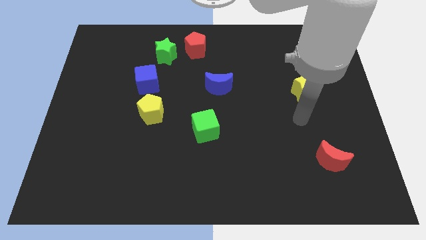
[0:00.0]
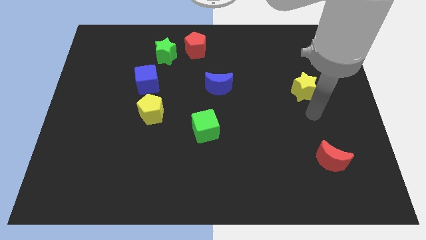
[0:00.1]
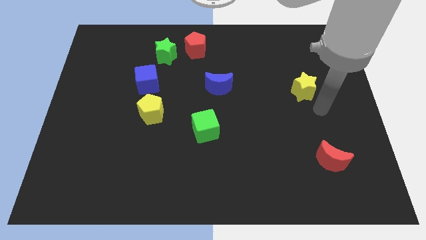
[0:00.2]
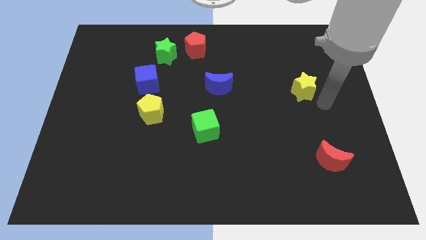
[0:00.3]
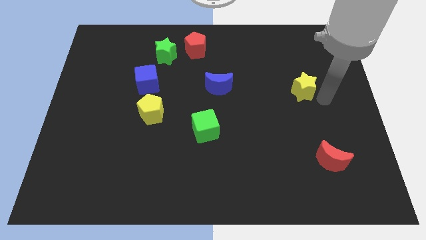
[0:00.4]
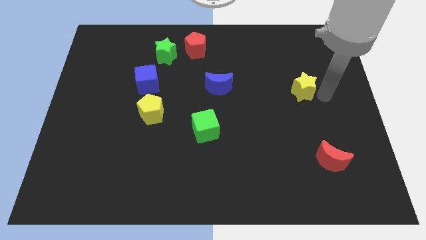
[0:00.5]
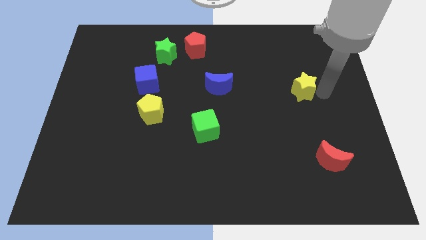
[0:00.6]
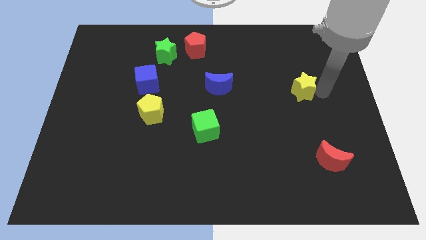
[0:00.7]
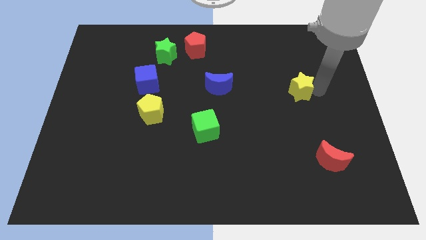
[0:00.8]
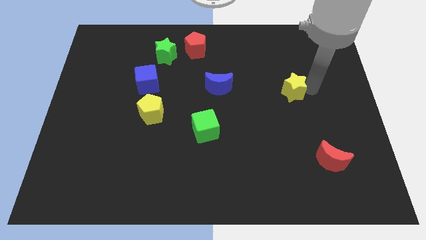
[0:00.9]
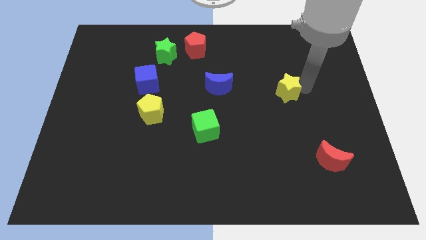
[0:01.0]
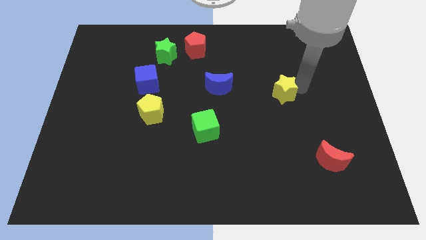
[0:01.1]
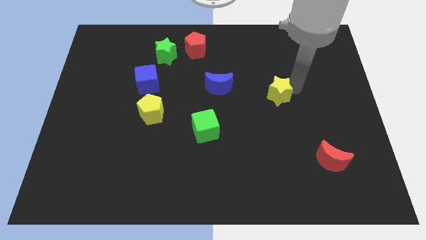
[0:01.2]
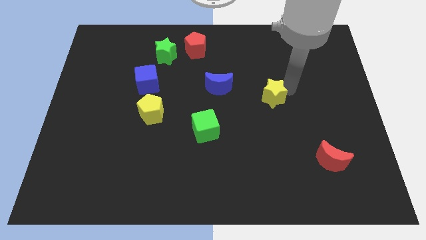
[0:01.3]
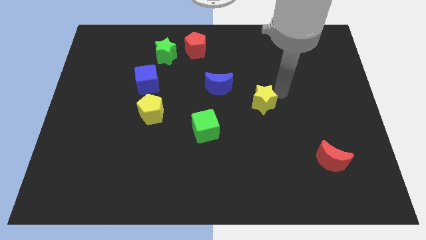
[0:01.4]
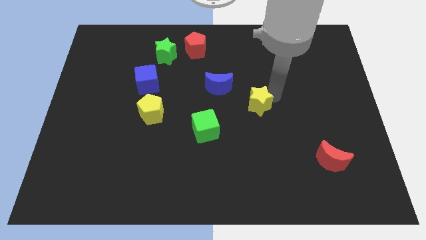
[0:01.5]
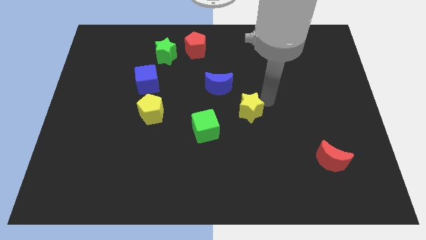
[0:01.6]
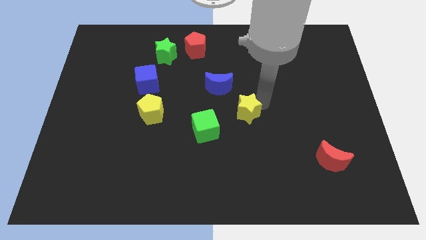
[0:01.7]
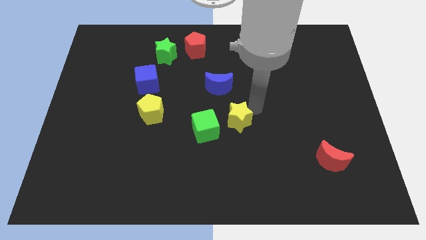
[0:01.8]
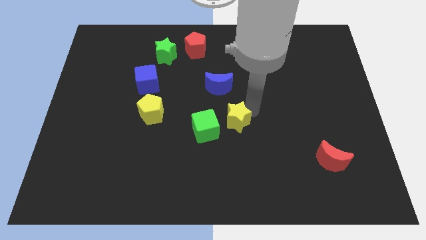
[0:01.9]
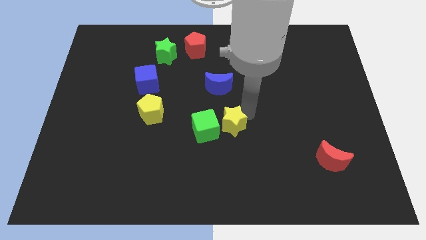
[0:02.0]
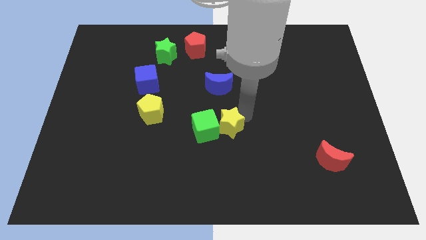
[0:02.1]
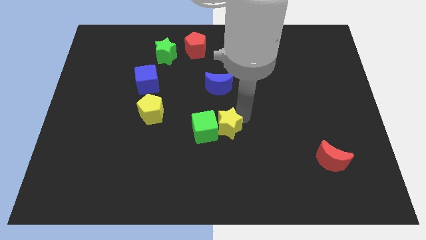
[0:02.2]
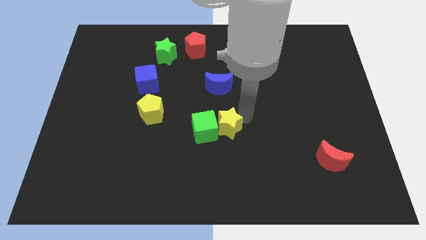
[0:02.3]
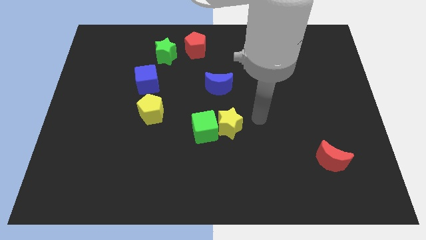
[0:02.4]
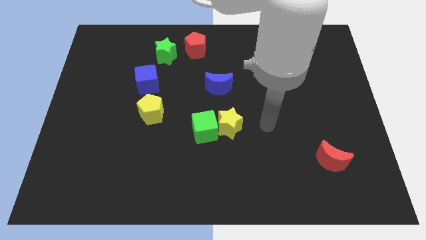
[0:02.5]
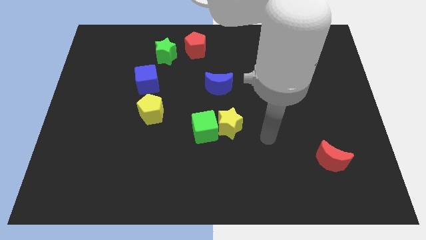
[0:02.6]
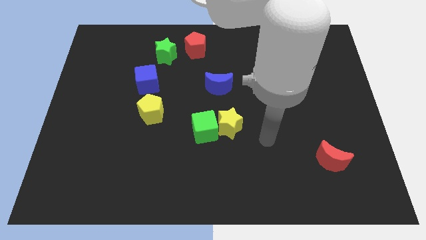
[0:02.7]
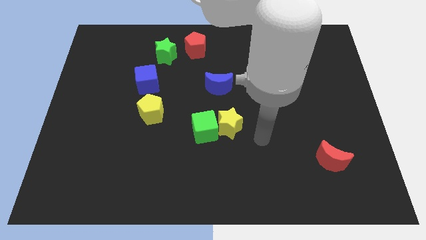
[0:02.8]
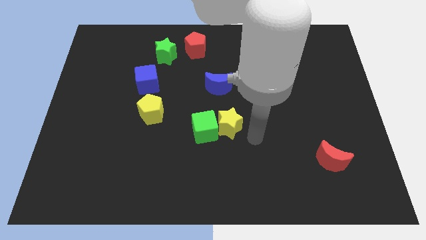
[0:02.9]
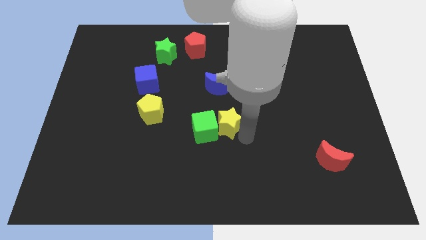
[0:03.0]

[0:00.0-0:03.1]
push yellow star vertically below blue moon

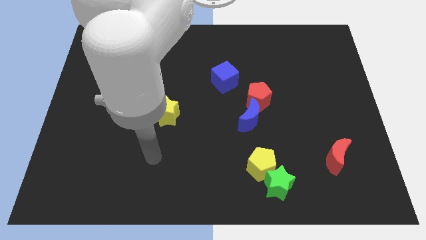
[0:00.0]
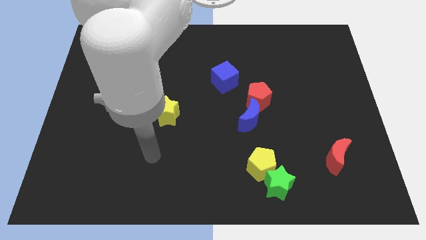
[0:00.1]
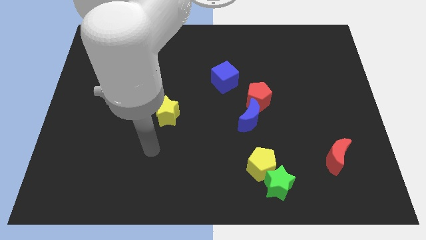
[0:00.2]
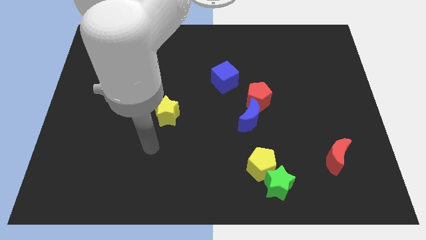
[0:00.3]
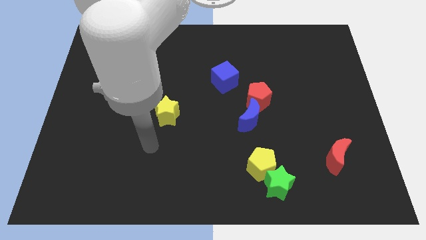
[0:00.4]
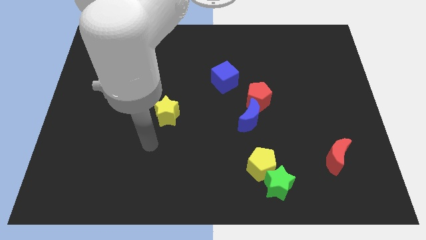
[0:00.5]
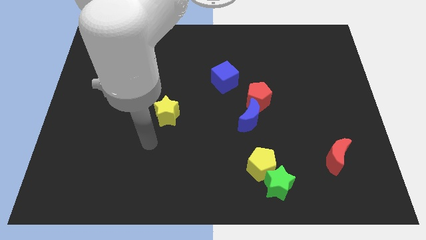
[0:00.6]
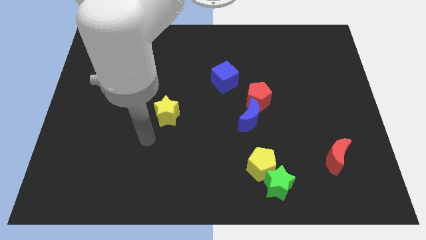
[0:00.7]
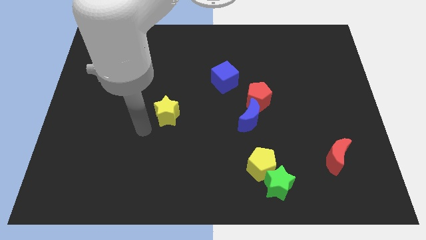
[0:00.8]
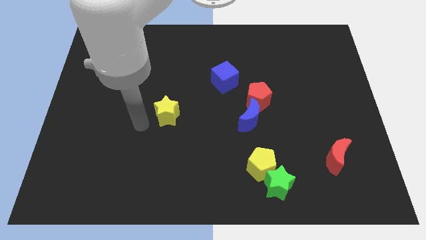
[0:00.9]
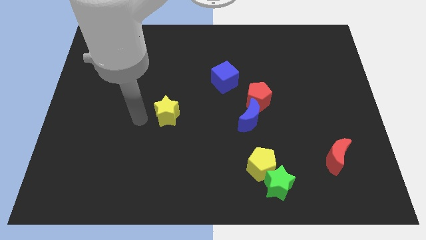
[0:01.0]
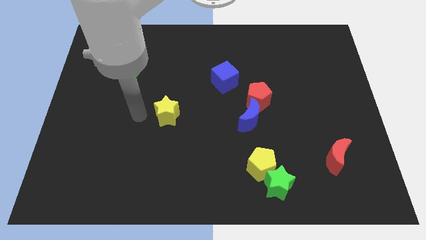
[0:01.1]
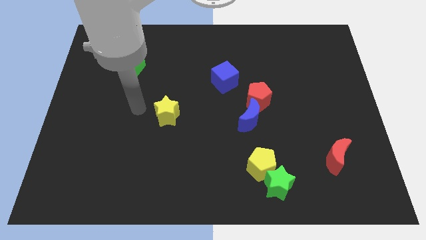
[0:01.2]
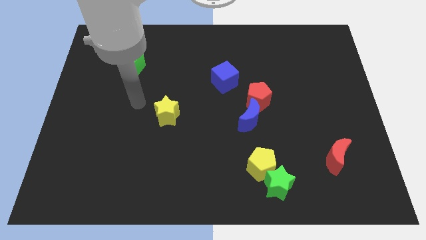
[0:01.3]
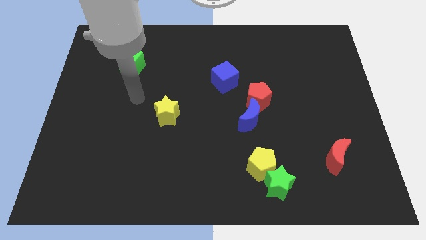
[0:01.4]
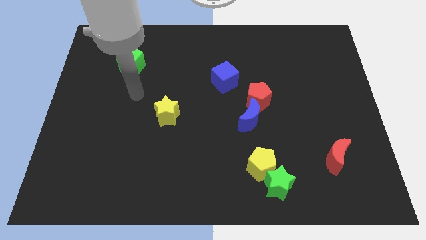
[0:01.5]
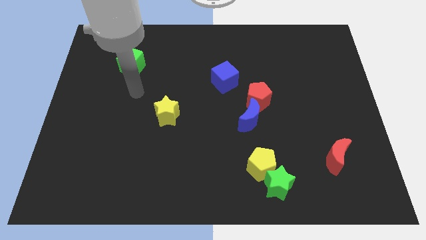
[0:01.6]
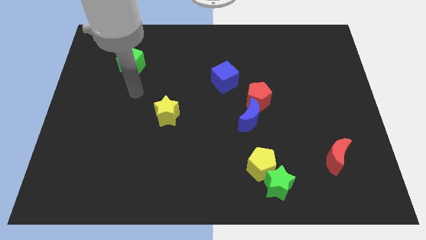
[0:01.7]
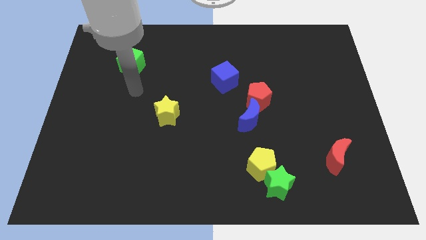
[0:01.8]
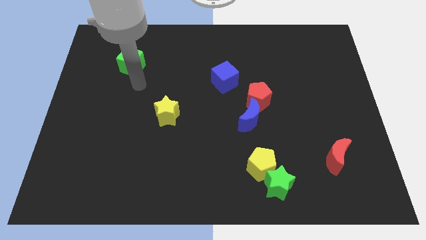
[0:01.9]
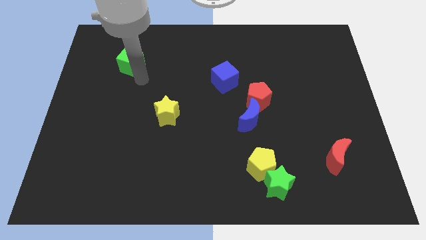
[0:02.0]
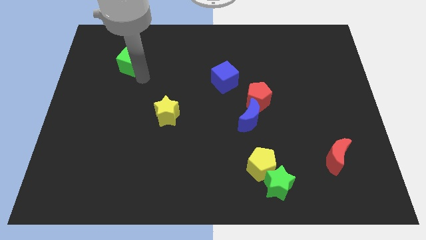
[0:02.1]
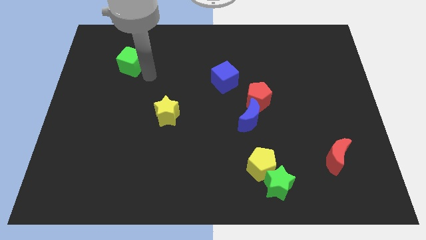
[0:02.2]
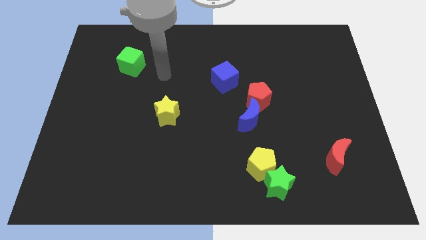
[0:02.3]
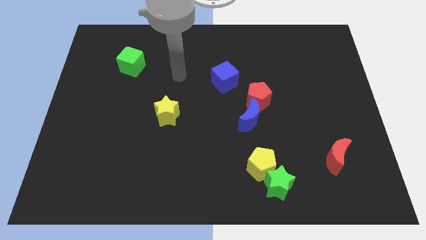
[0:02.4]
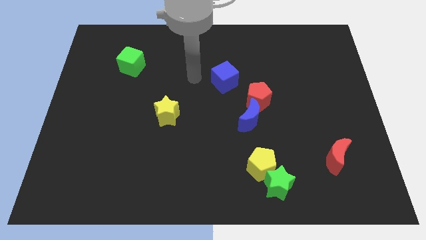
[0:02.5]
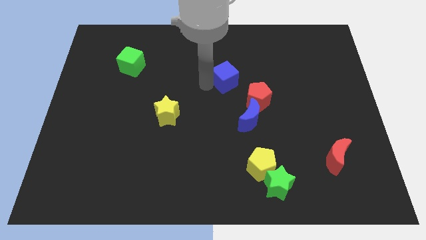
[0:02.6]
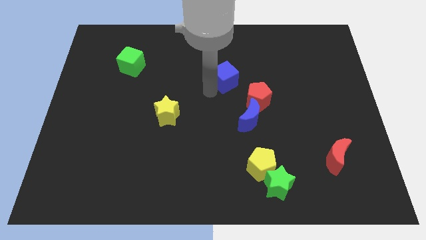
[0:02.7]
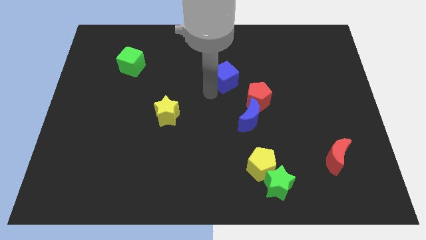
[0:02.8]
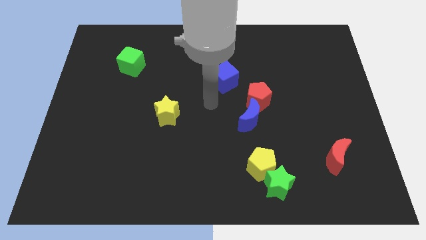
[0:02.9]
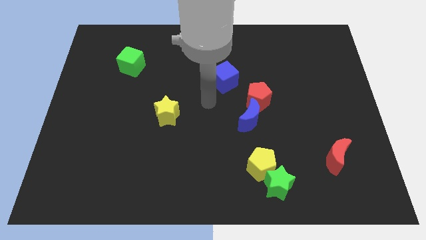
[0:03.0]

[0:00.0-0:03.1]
move your arm to the left of blue cube

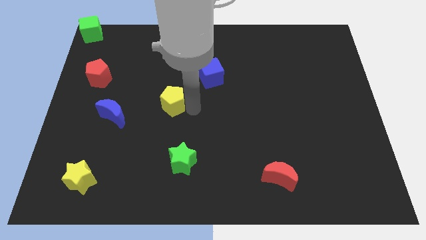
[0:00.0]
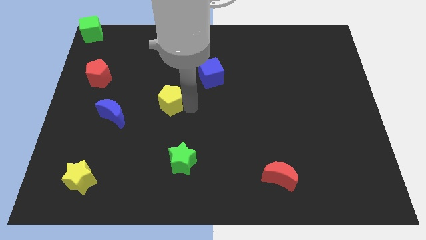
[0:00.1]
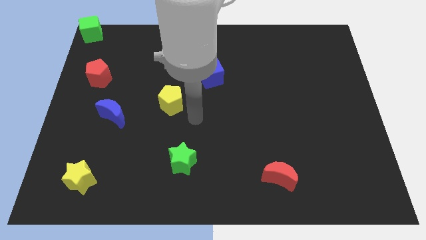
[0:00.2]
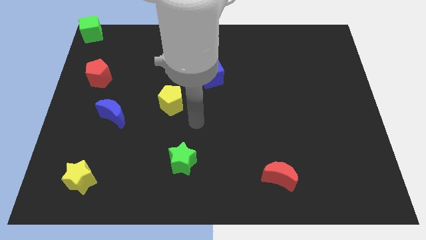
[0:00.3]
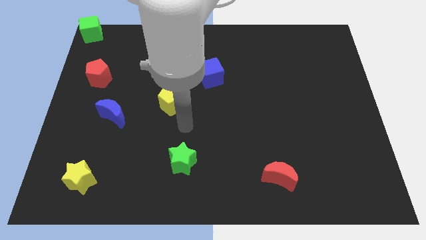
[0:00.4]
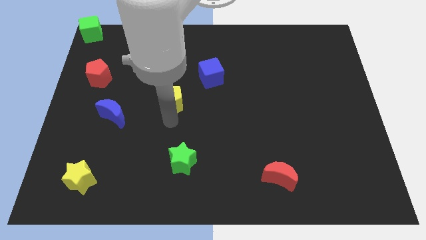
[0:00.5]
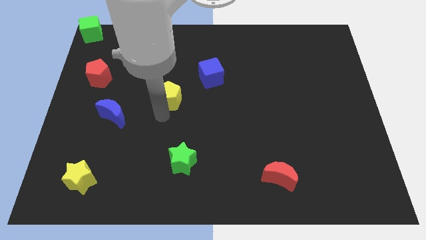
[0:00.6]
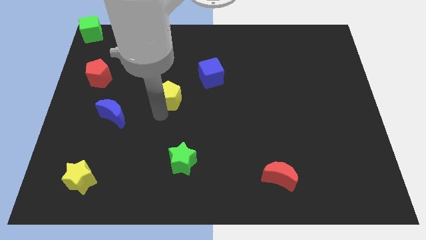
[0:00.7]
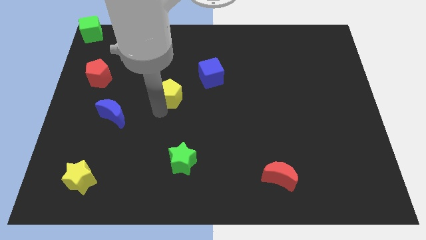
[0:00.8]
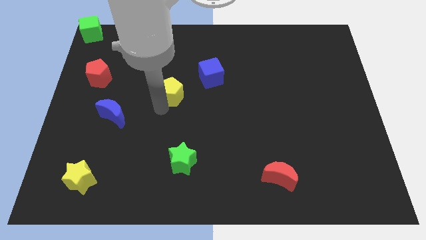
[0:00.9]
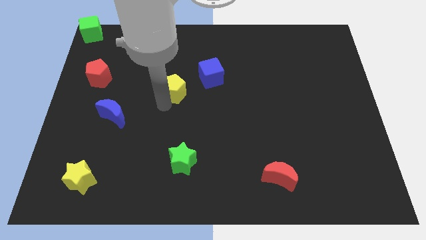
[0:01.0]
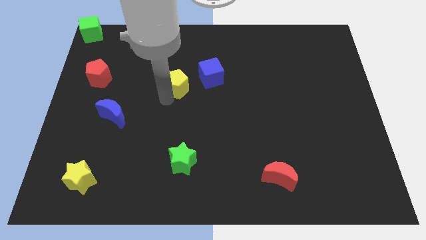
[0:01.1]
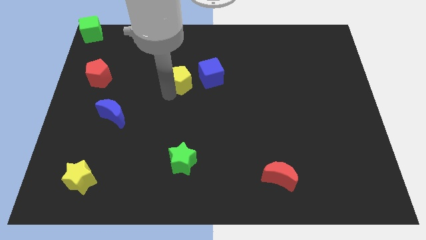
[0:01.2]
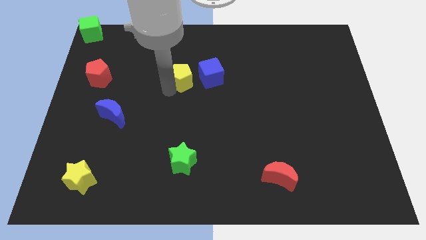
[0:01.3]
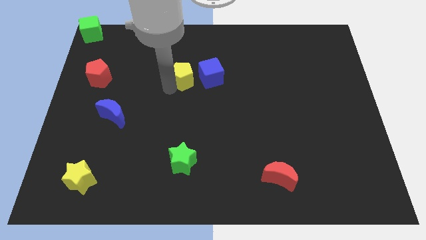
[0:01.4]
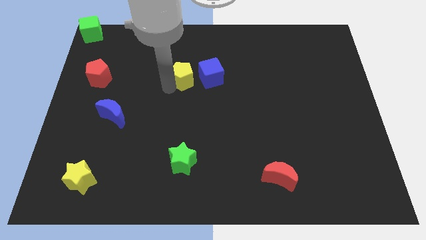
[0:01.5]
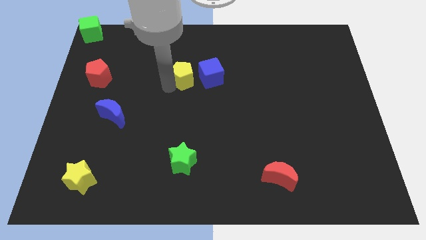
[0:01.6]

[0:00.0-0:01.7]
place the yellow pentagon left to the blue cube

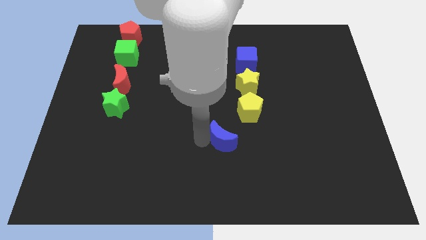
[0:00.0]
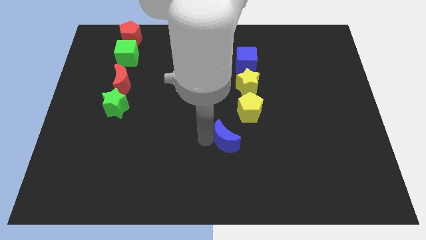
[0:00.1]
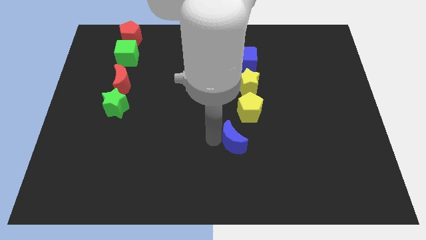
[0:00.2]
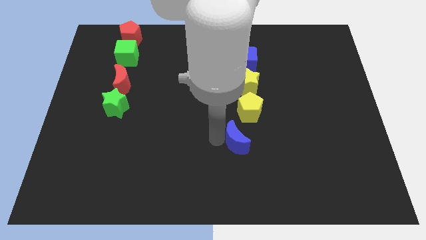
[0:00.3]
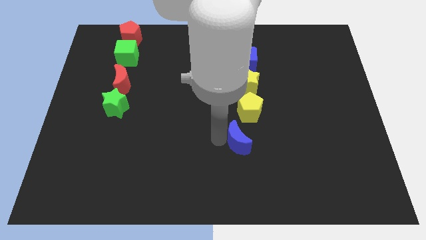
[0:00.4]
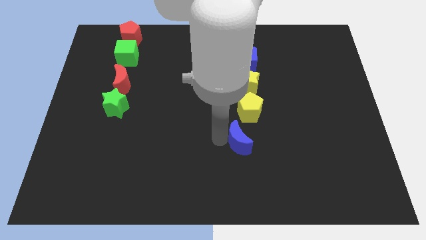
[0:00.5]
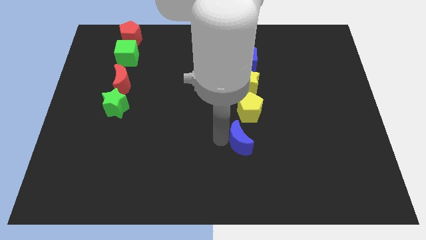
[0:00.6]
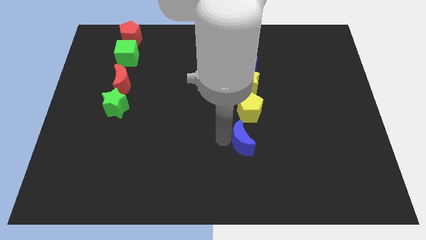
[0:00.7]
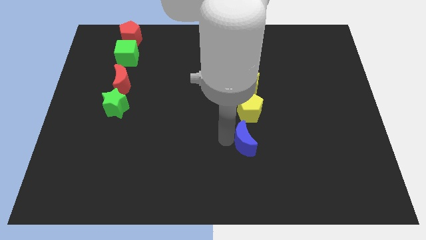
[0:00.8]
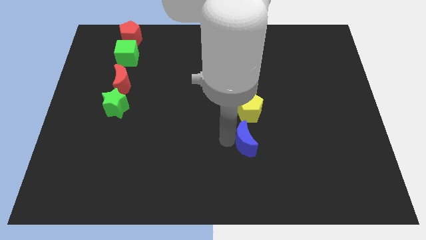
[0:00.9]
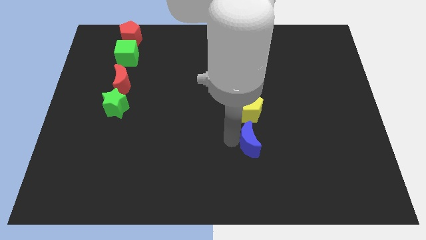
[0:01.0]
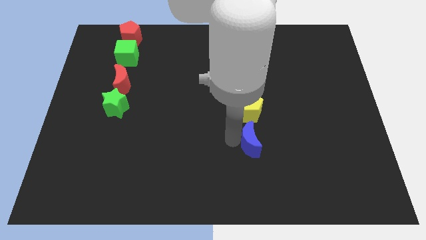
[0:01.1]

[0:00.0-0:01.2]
move the blue crescent below the yellow pentagon
